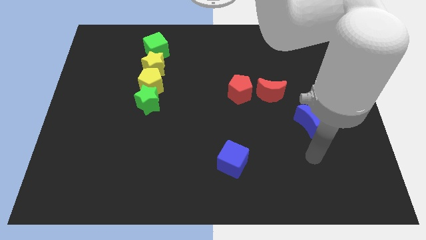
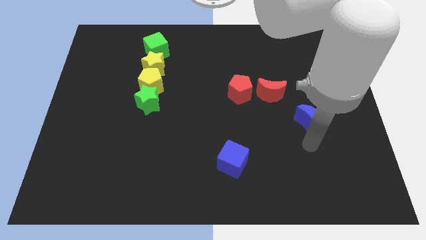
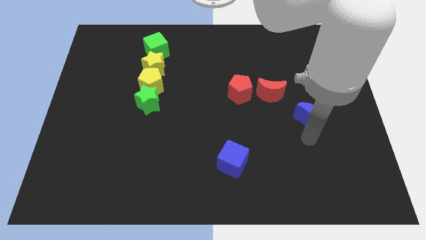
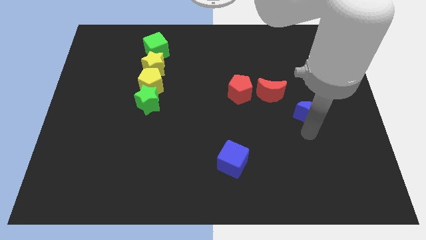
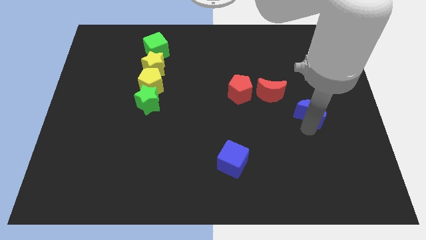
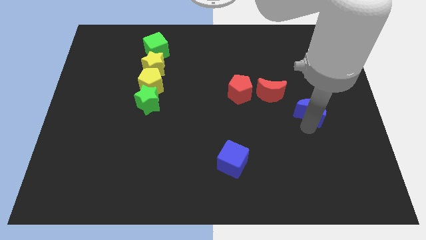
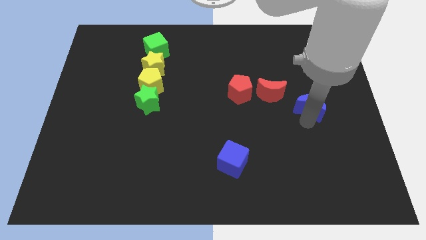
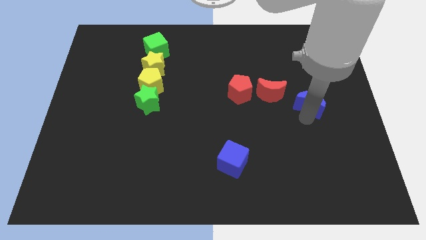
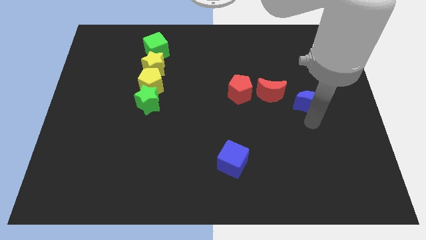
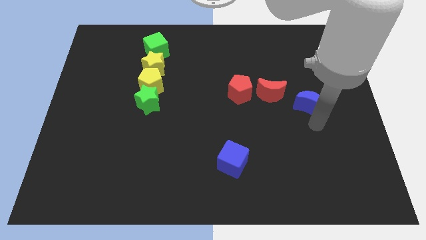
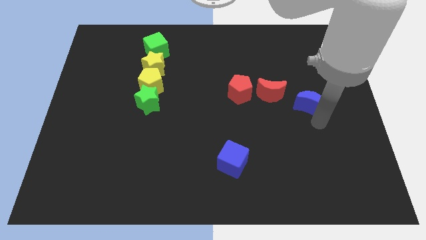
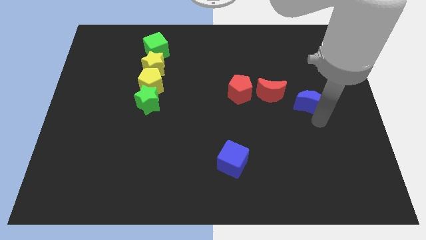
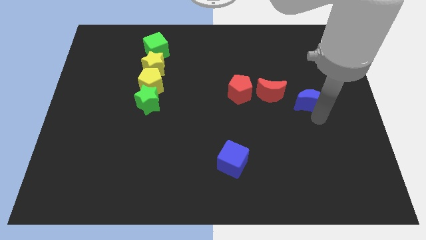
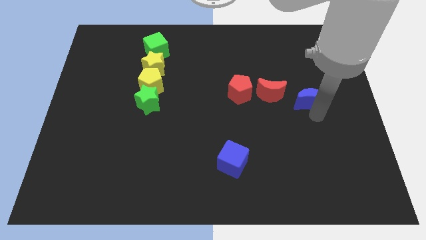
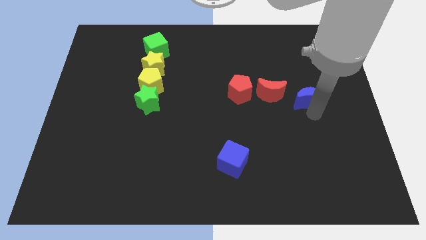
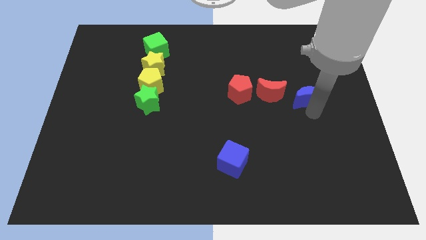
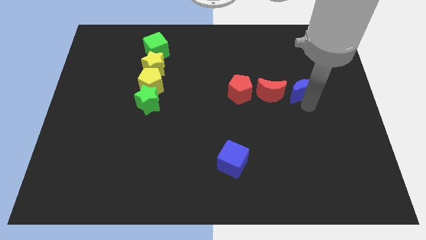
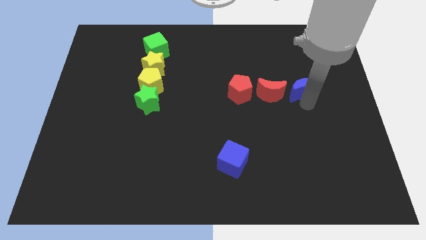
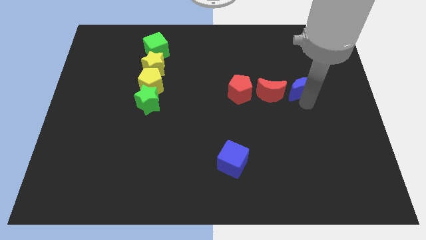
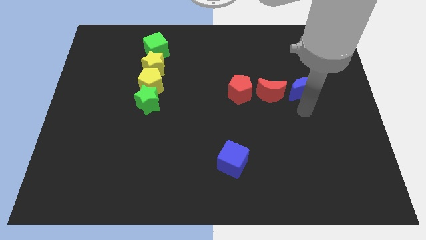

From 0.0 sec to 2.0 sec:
slide the blue crescent slightly upwards

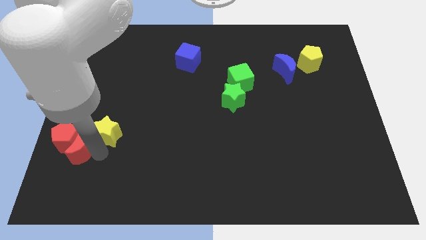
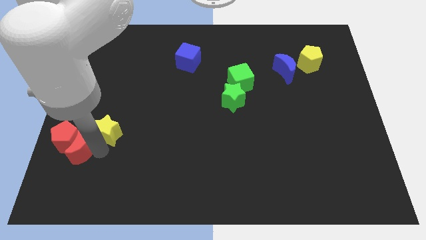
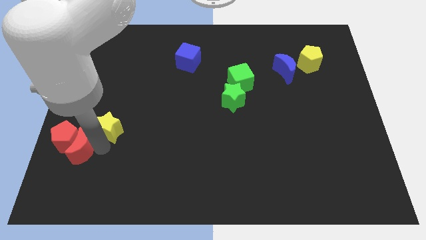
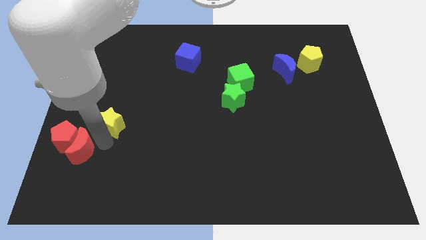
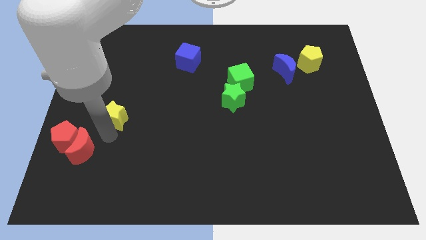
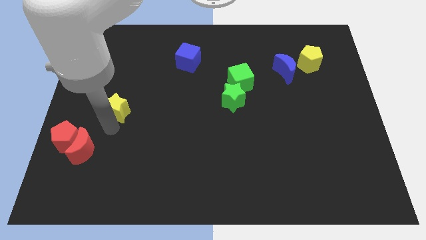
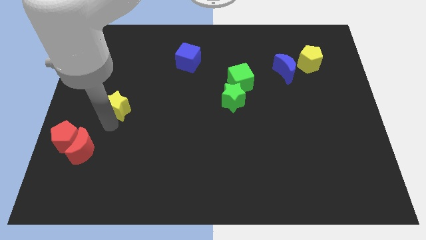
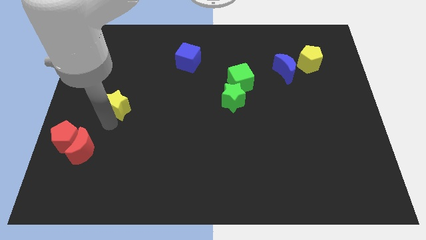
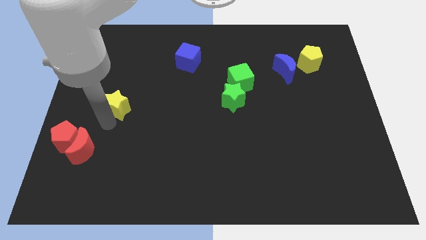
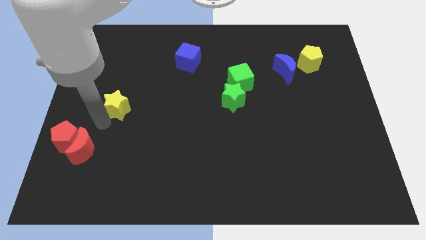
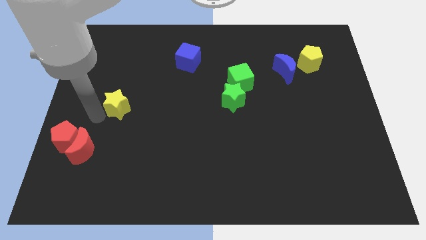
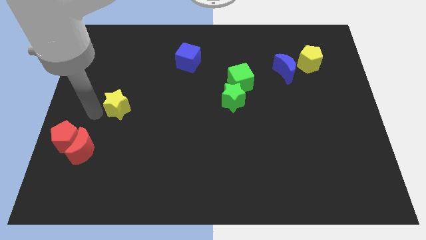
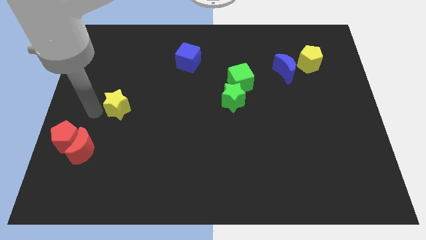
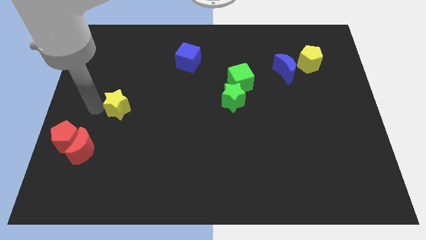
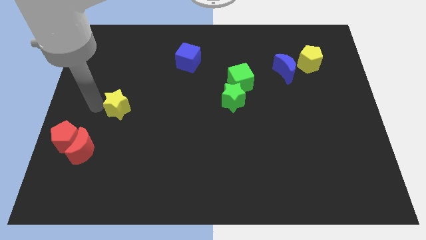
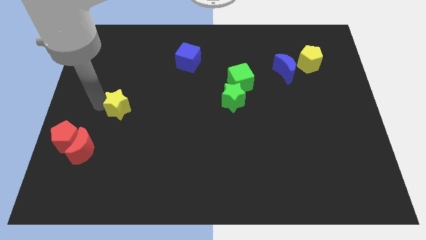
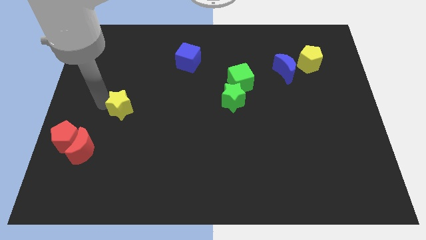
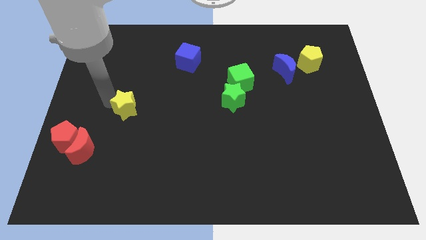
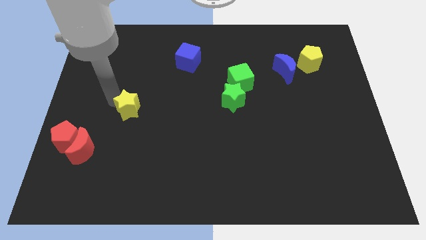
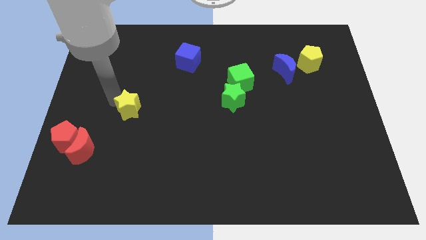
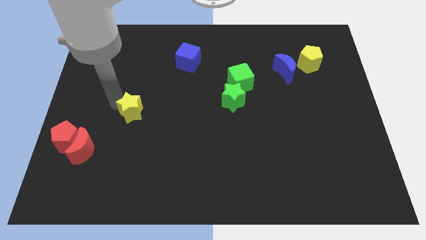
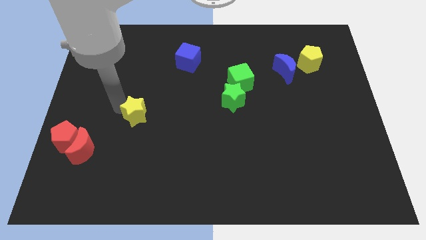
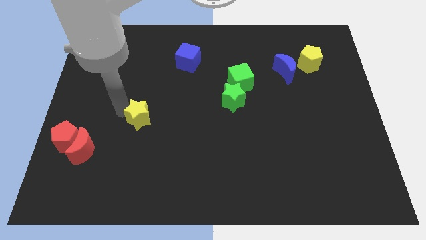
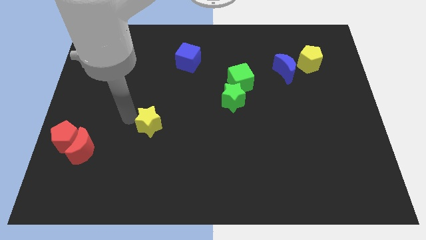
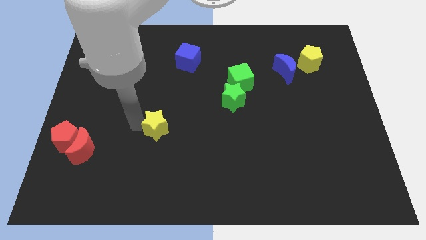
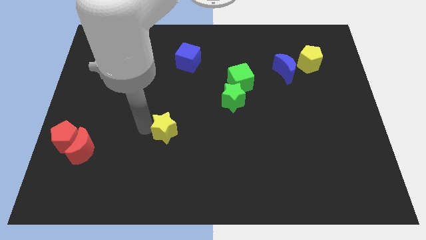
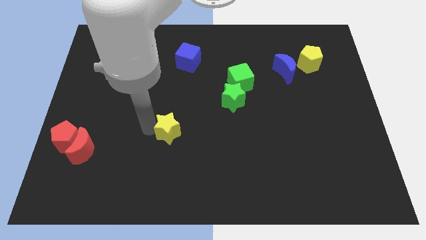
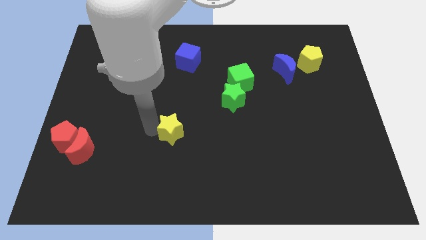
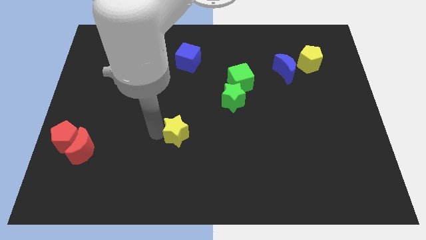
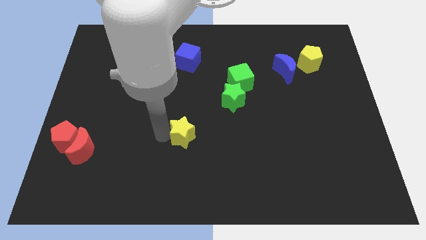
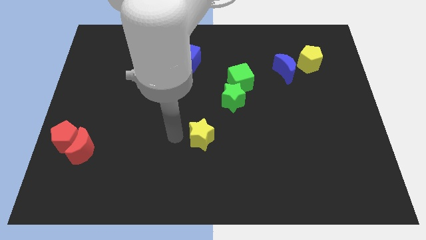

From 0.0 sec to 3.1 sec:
move yellow star diagonally to the bottom of the green star

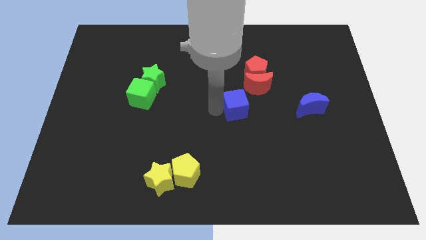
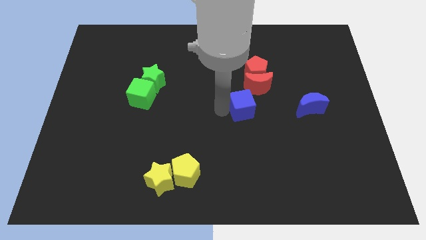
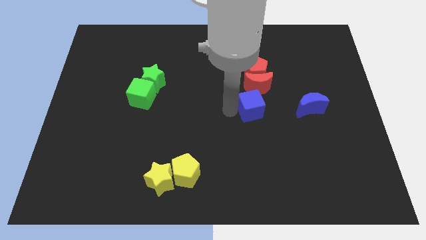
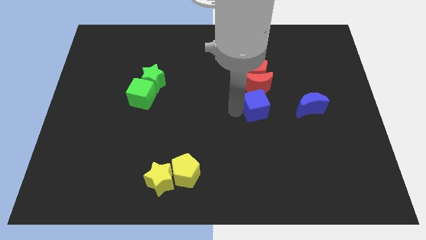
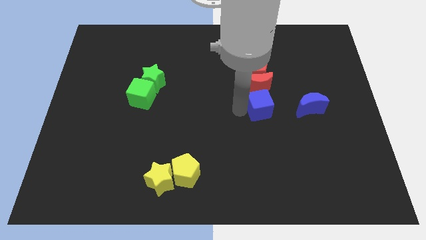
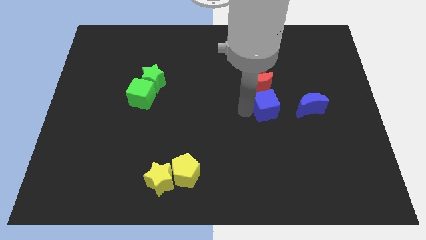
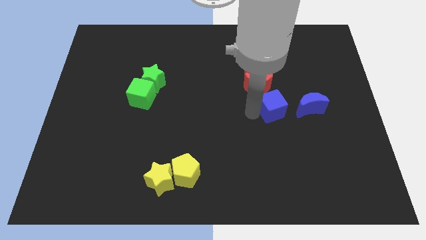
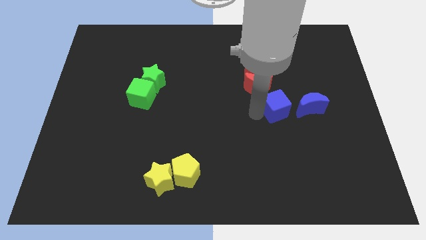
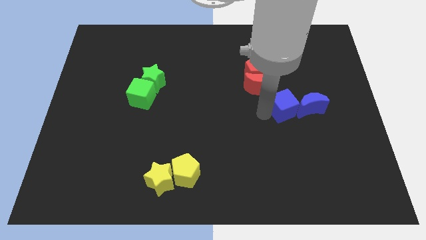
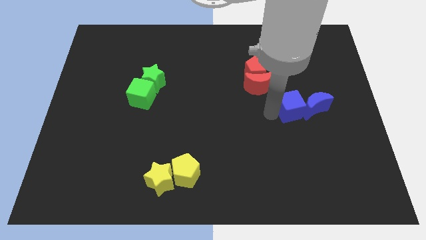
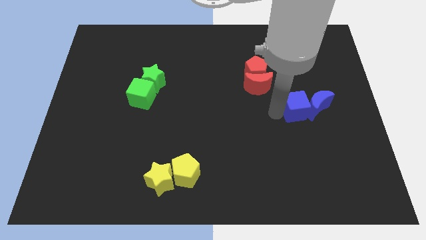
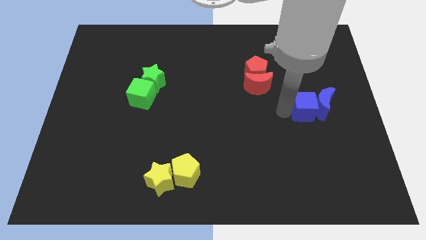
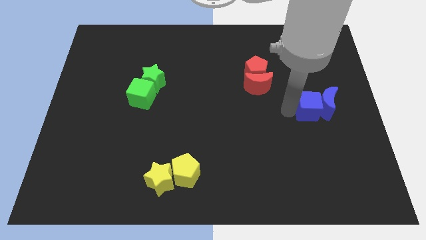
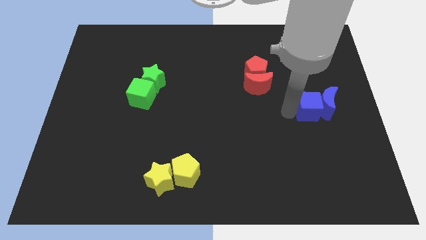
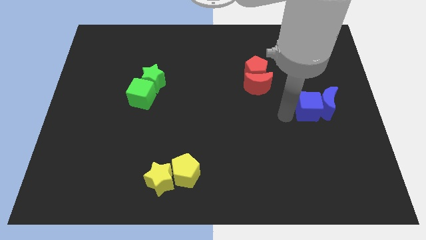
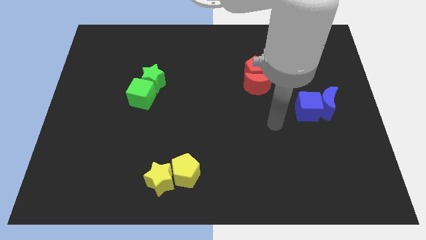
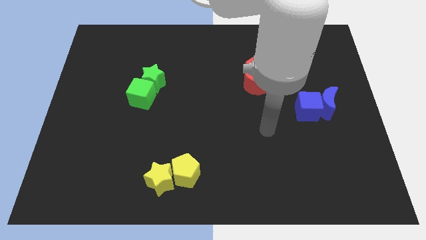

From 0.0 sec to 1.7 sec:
push the blue cube into the blue moon

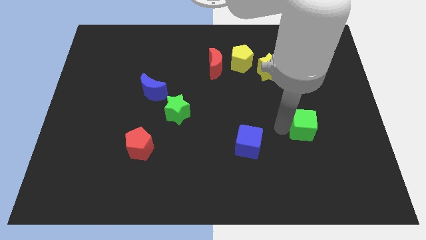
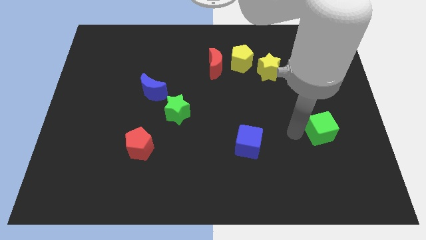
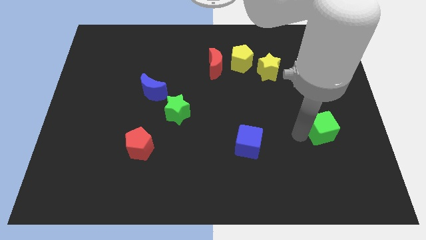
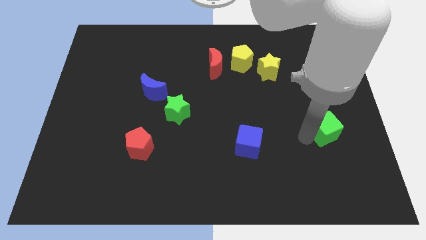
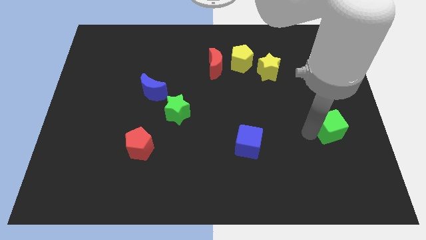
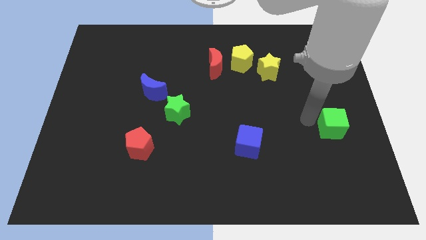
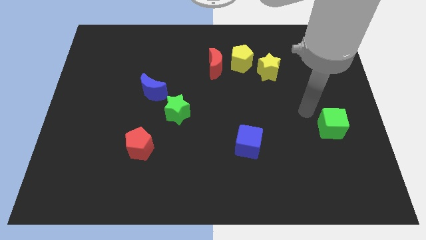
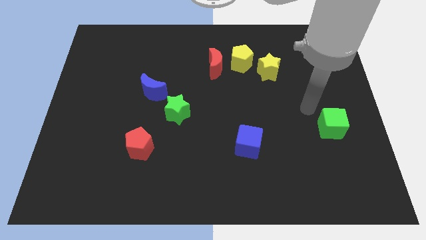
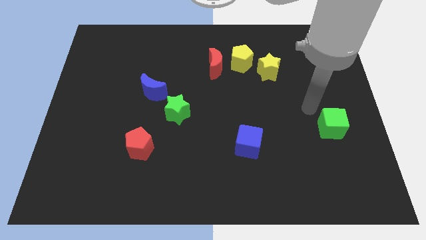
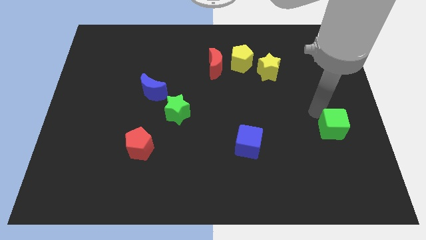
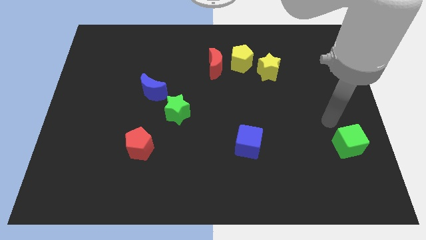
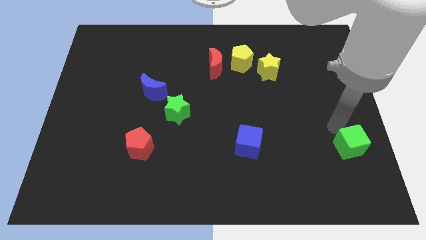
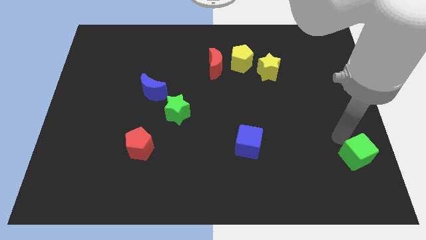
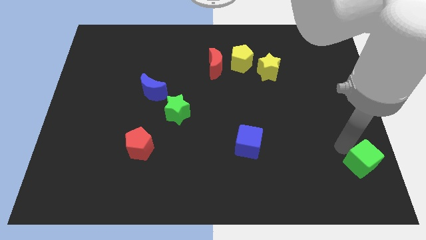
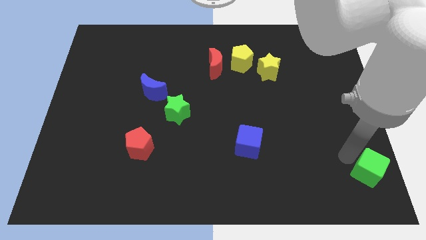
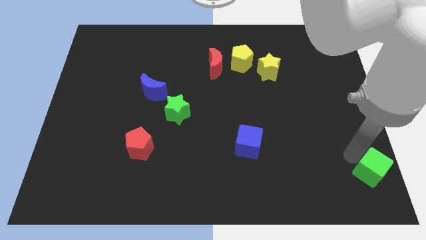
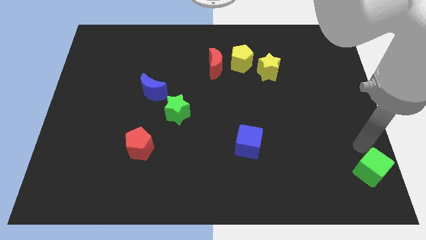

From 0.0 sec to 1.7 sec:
push the green cube towards the bottom right

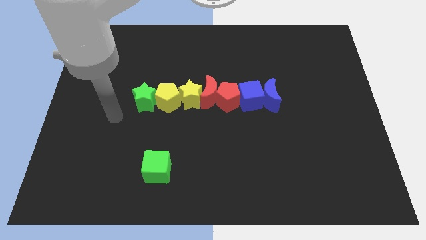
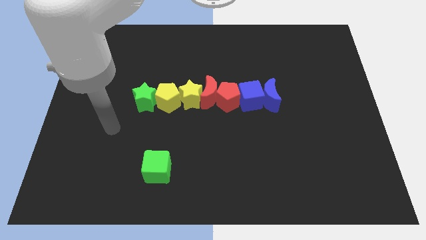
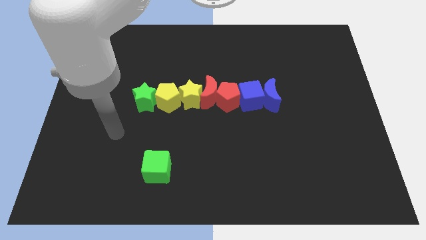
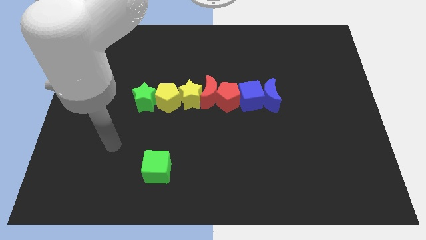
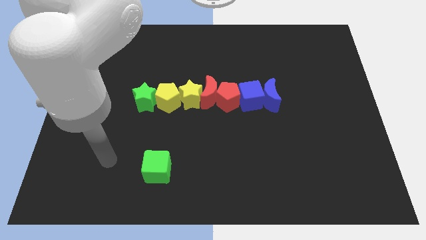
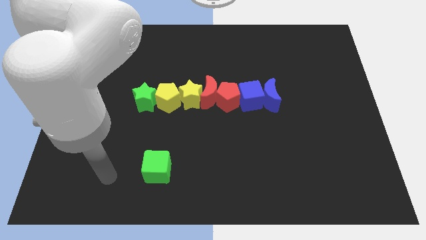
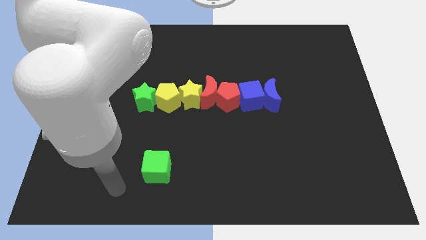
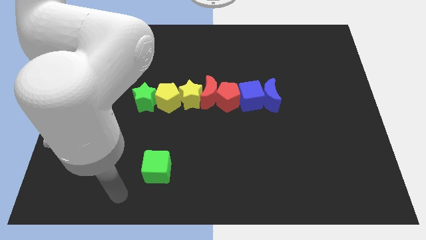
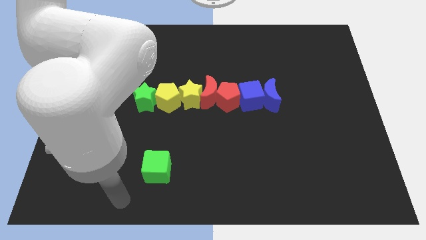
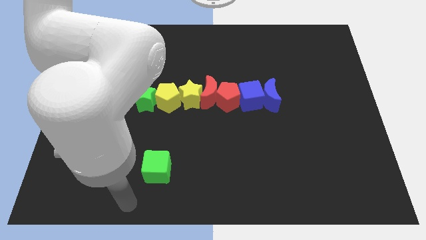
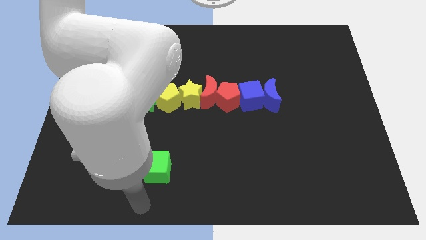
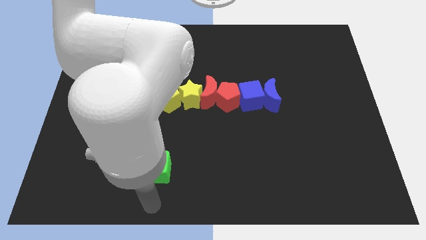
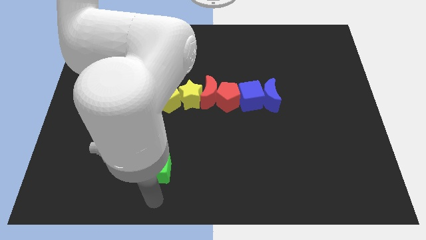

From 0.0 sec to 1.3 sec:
move your hand vertically below the green cube
